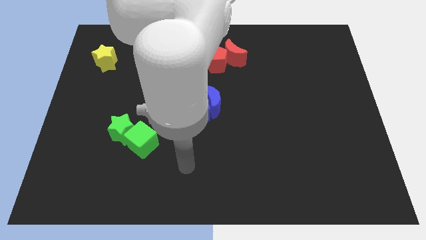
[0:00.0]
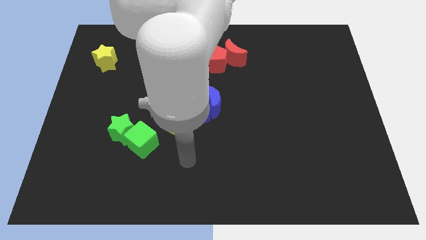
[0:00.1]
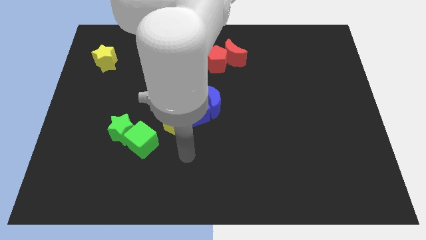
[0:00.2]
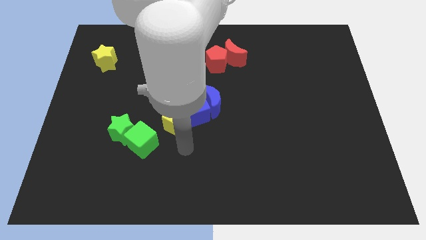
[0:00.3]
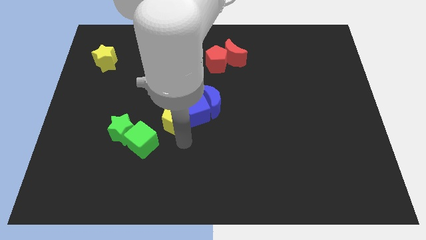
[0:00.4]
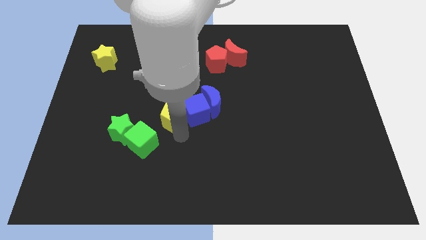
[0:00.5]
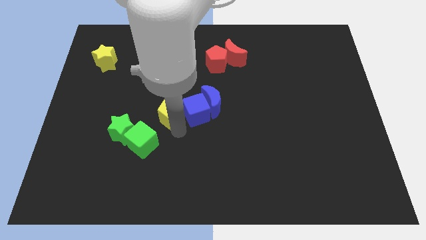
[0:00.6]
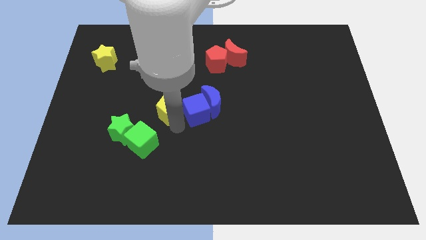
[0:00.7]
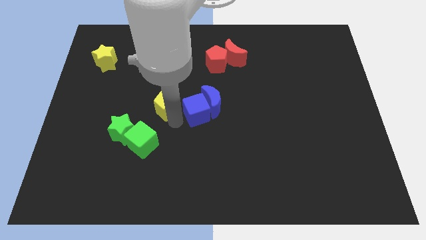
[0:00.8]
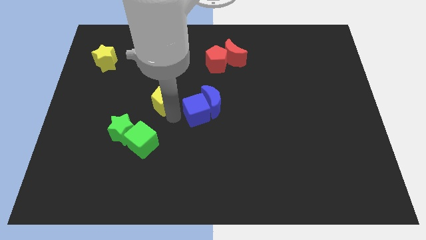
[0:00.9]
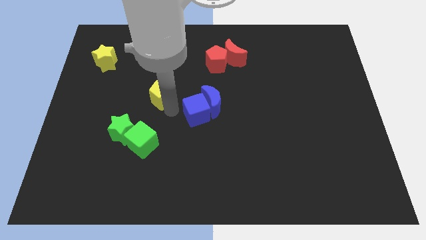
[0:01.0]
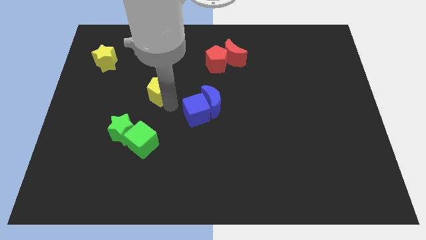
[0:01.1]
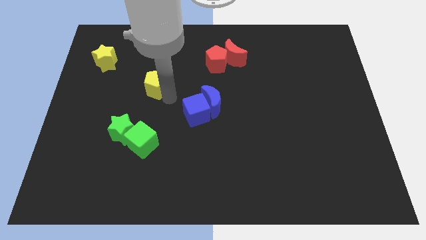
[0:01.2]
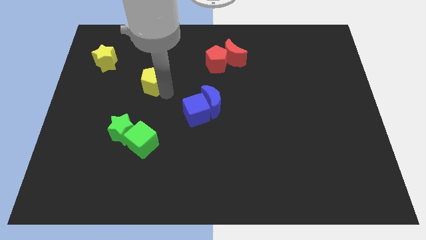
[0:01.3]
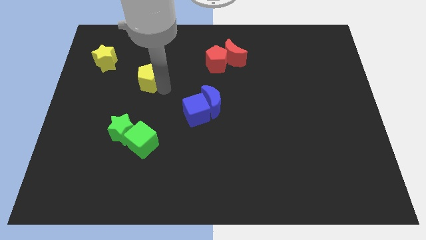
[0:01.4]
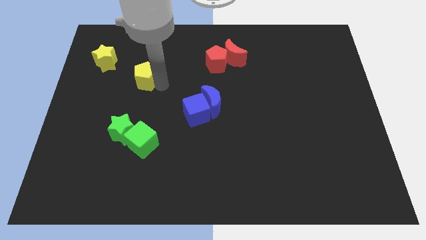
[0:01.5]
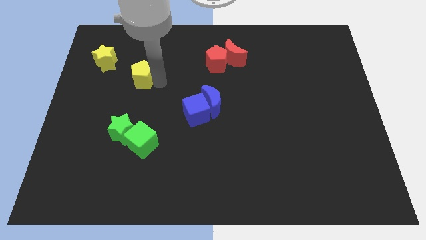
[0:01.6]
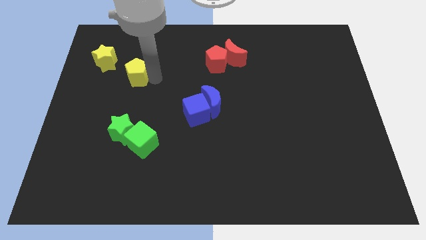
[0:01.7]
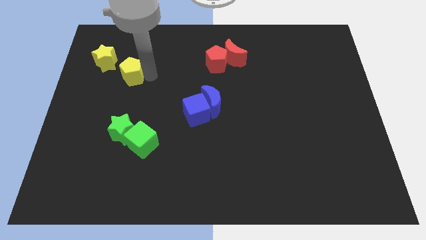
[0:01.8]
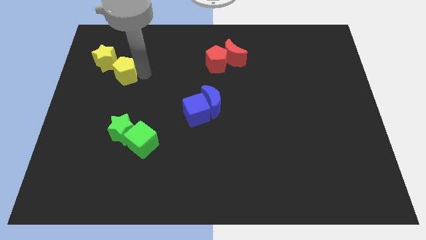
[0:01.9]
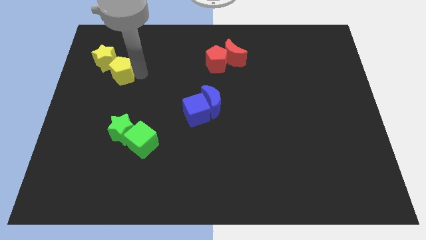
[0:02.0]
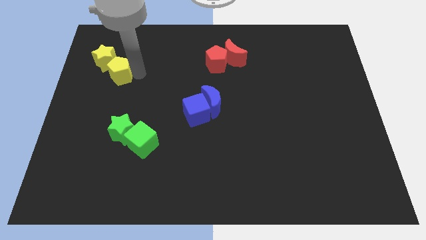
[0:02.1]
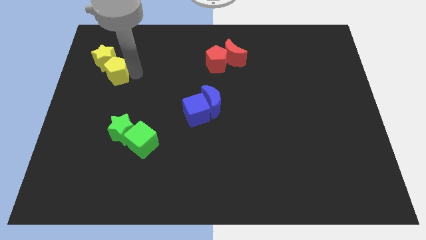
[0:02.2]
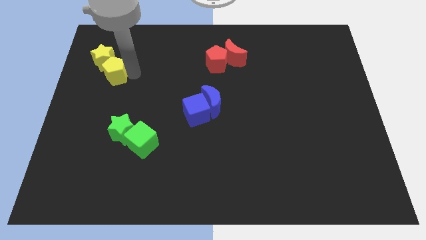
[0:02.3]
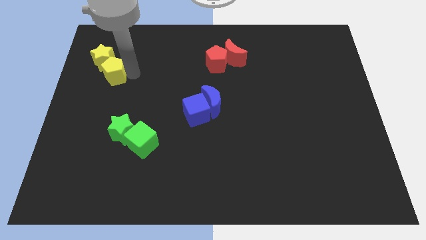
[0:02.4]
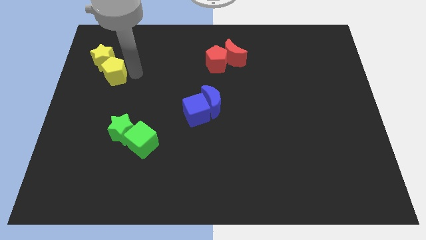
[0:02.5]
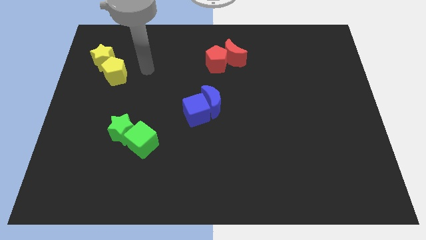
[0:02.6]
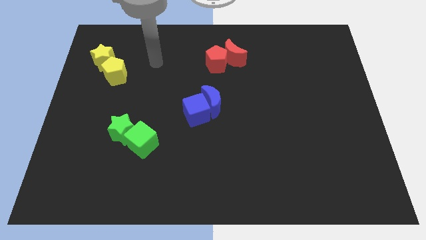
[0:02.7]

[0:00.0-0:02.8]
place the yellow pentagon at the bottom of yellow star

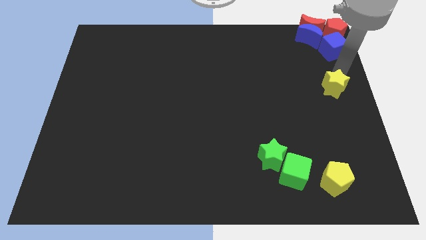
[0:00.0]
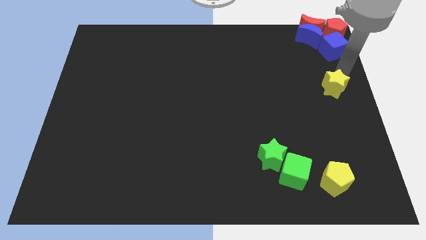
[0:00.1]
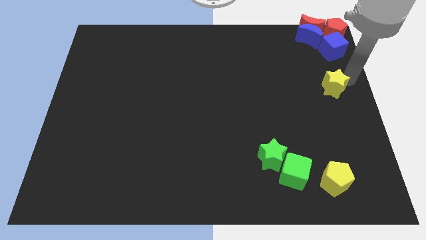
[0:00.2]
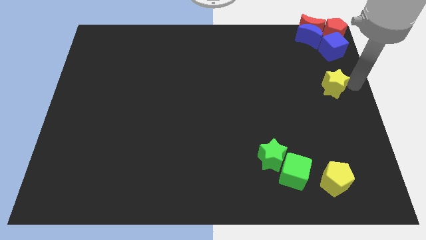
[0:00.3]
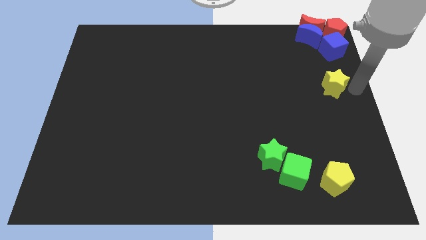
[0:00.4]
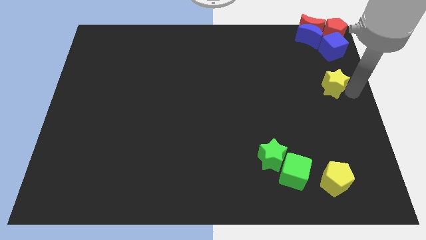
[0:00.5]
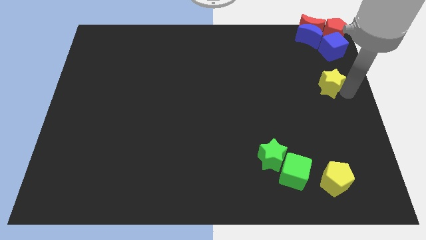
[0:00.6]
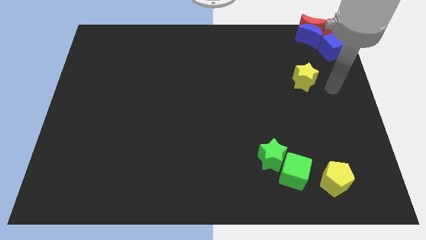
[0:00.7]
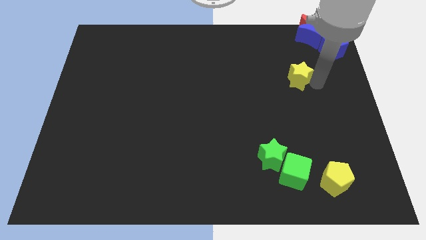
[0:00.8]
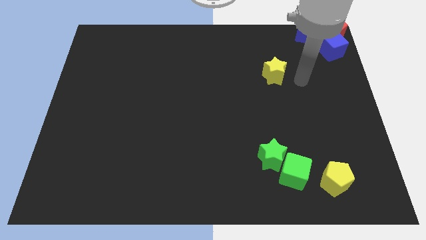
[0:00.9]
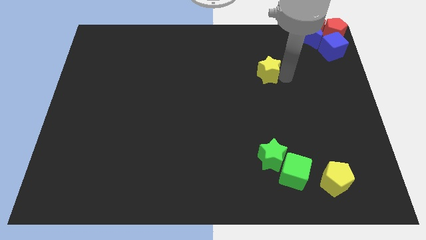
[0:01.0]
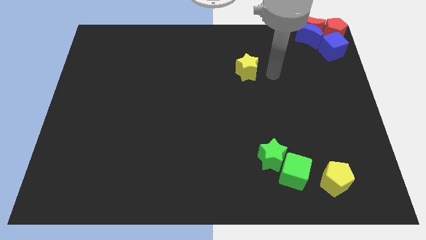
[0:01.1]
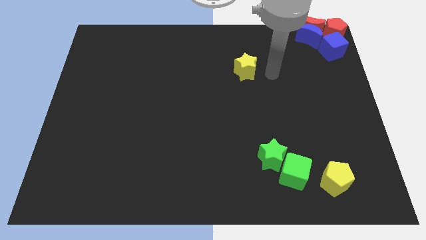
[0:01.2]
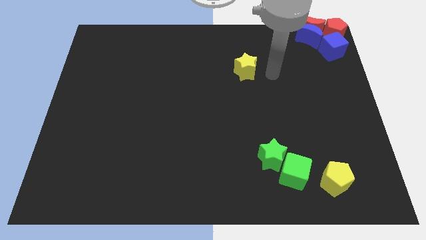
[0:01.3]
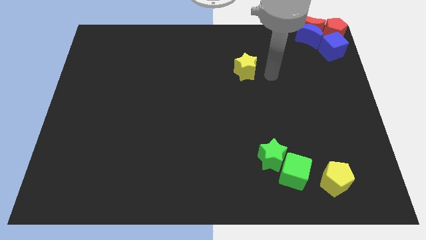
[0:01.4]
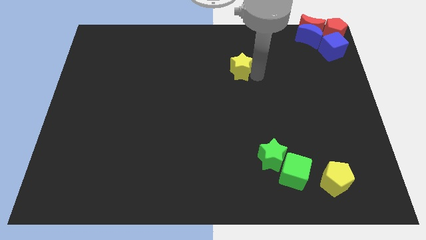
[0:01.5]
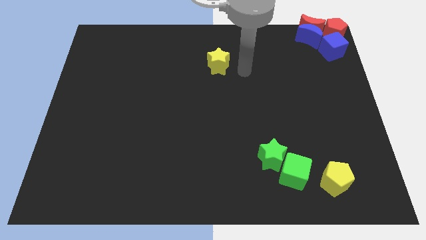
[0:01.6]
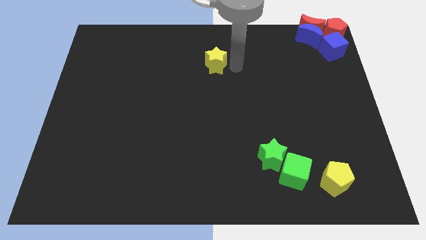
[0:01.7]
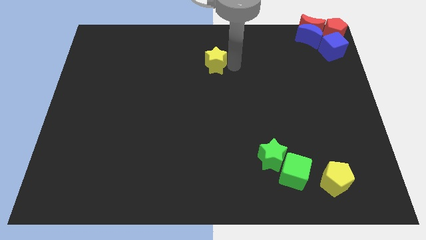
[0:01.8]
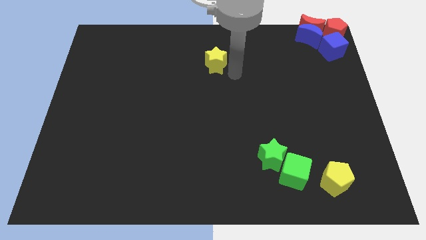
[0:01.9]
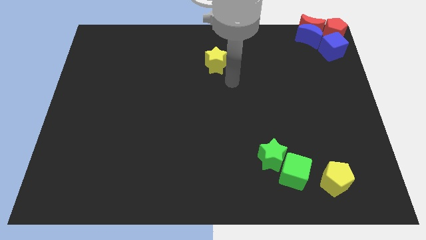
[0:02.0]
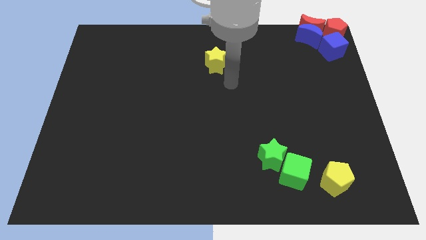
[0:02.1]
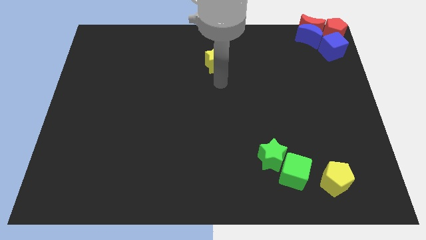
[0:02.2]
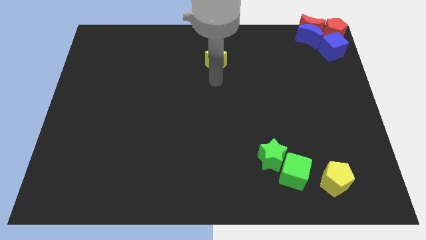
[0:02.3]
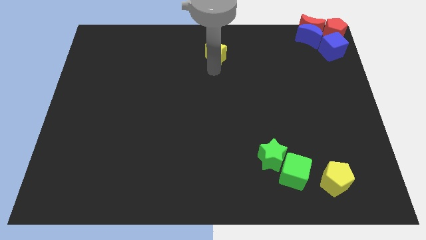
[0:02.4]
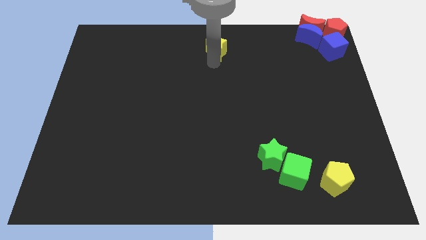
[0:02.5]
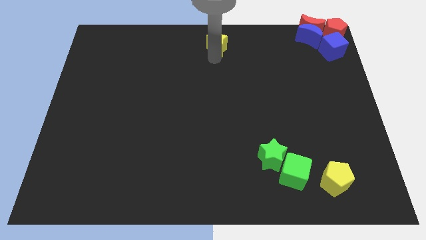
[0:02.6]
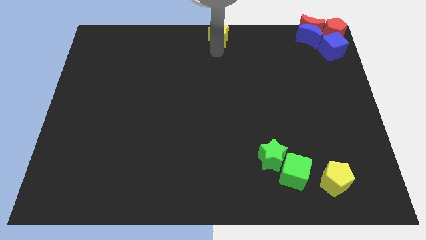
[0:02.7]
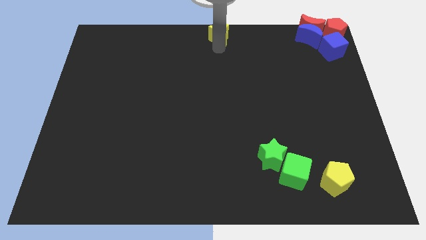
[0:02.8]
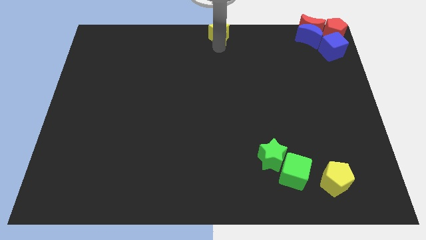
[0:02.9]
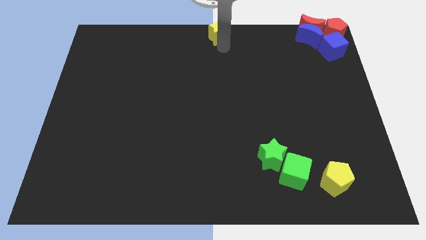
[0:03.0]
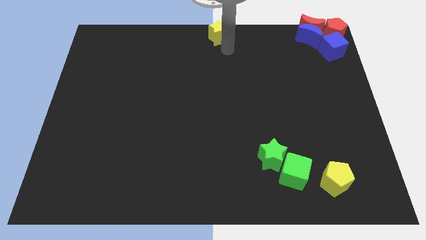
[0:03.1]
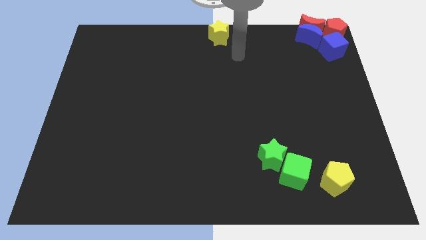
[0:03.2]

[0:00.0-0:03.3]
push the yellow star to the top center of the board

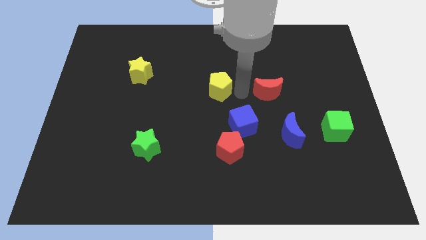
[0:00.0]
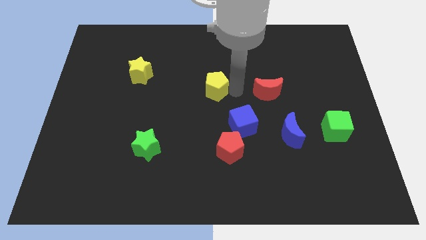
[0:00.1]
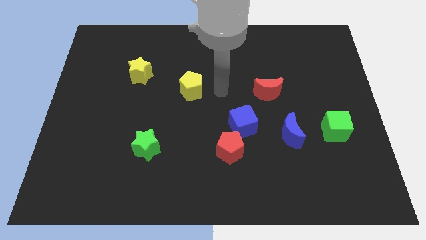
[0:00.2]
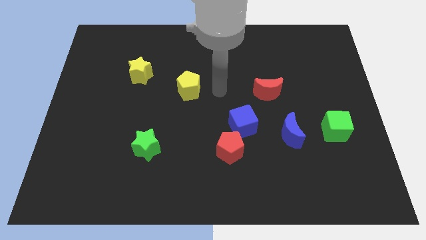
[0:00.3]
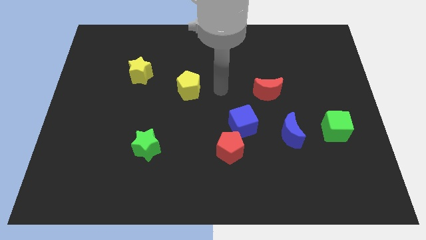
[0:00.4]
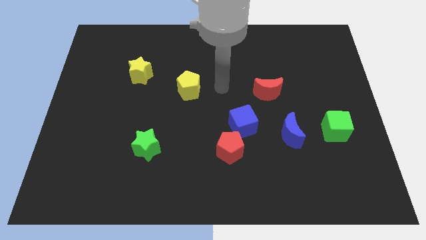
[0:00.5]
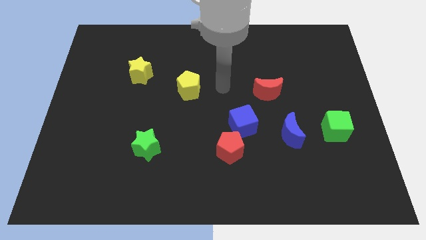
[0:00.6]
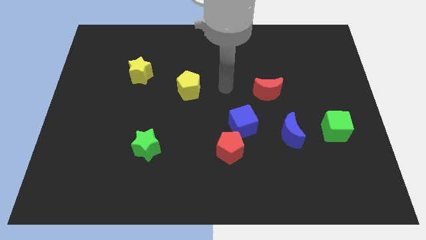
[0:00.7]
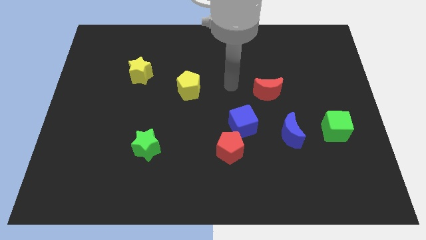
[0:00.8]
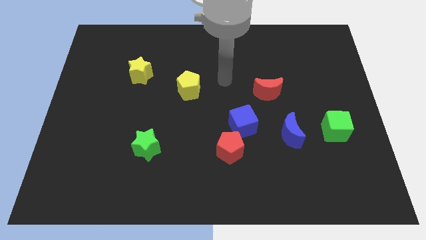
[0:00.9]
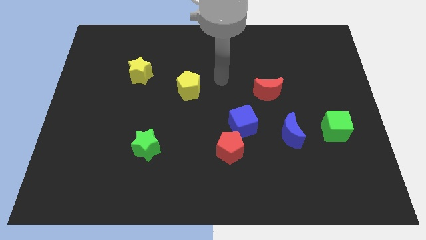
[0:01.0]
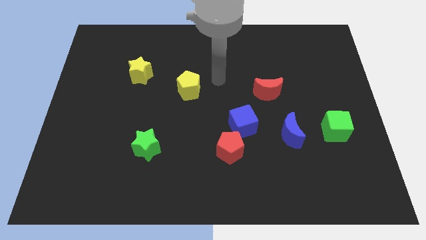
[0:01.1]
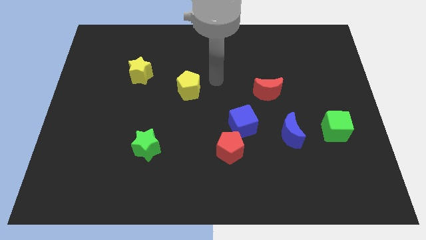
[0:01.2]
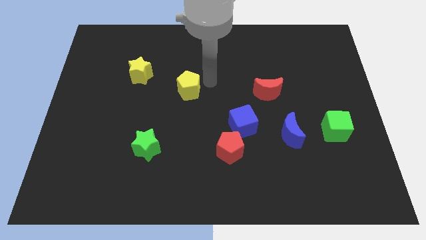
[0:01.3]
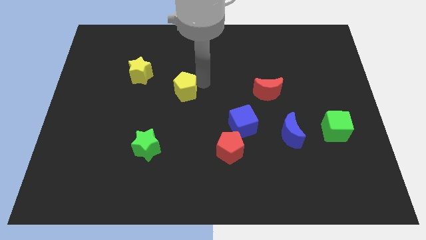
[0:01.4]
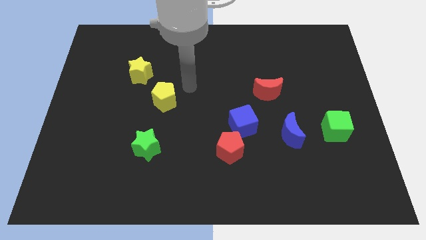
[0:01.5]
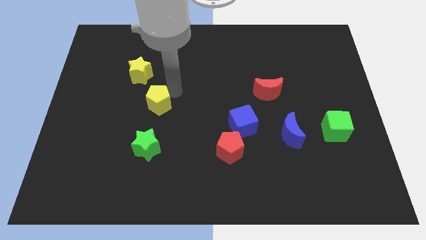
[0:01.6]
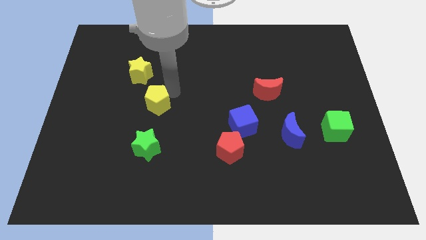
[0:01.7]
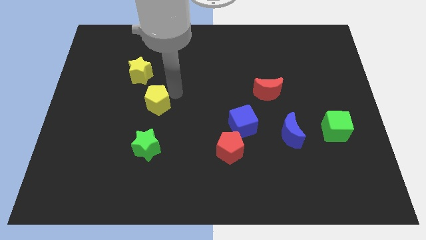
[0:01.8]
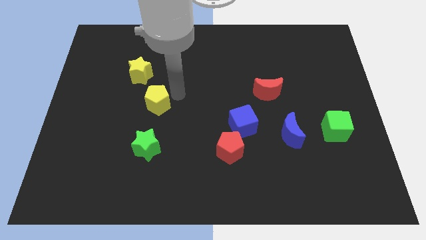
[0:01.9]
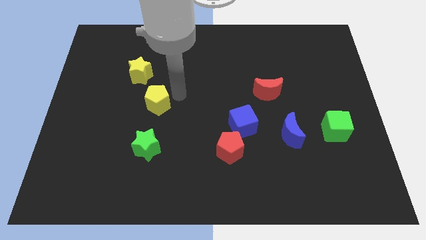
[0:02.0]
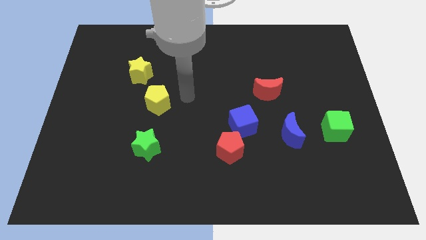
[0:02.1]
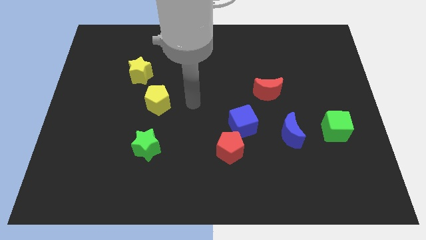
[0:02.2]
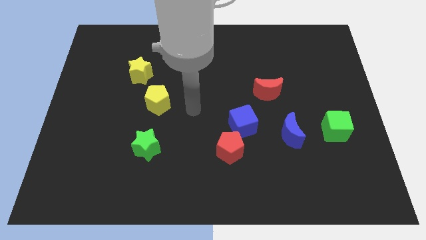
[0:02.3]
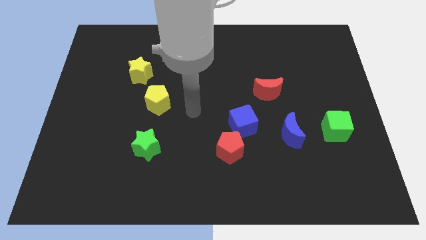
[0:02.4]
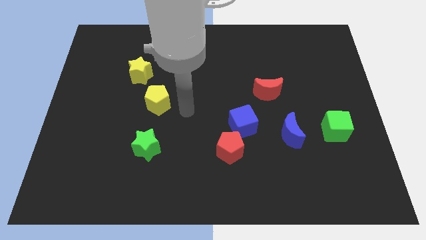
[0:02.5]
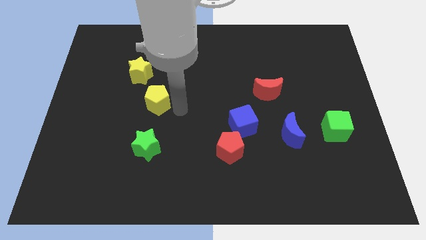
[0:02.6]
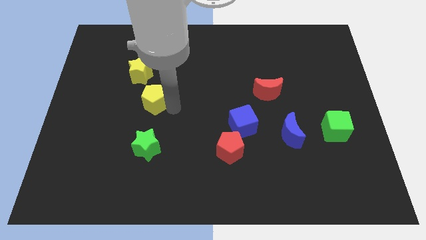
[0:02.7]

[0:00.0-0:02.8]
place the arm right to the yellow pentagon

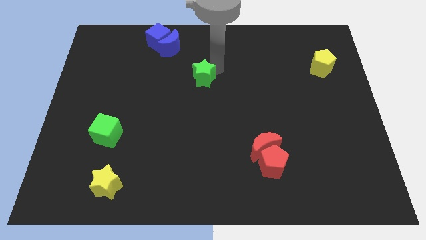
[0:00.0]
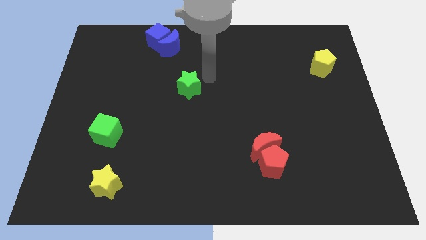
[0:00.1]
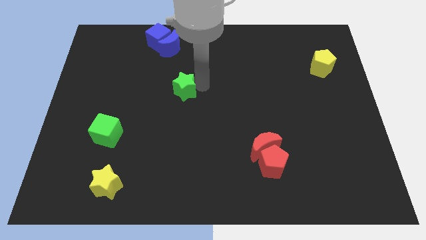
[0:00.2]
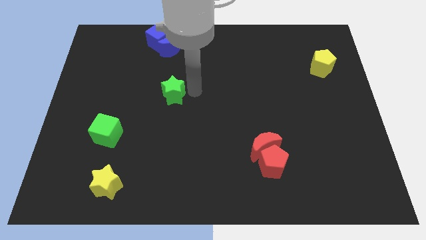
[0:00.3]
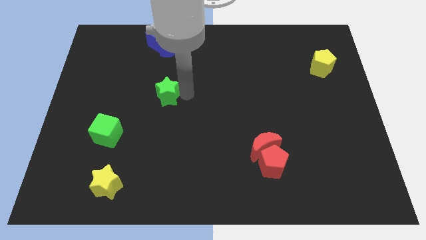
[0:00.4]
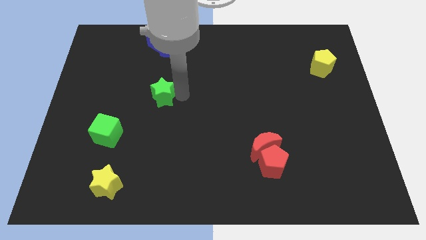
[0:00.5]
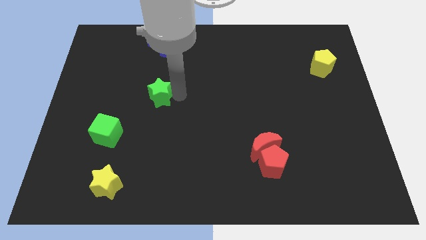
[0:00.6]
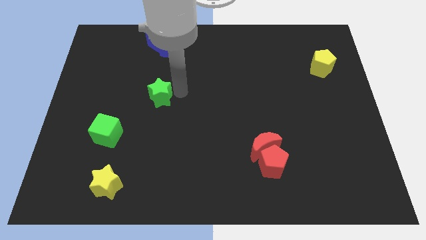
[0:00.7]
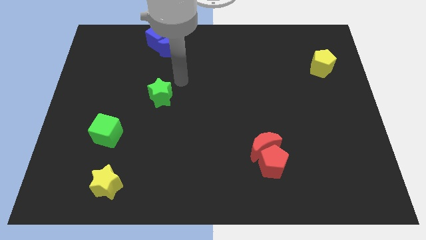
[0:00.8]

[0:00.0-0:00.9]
push the green star slightly to the bottom
